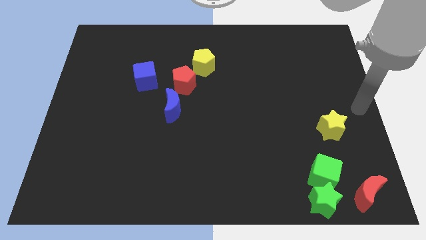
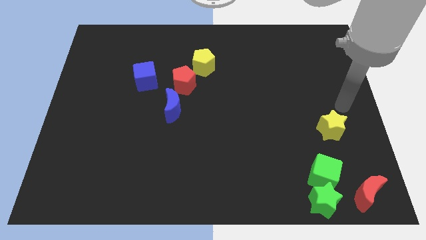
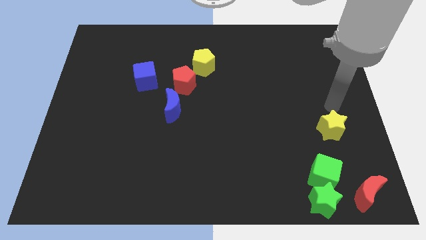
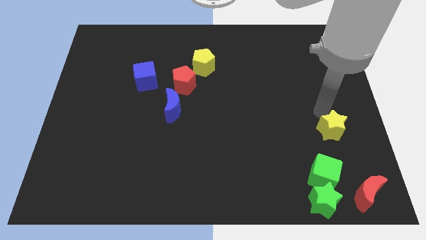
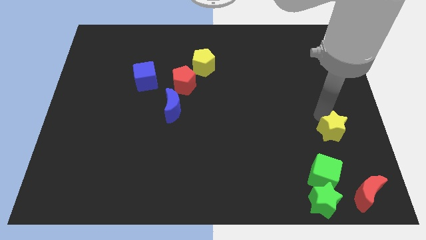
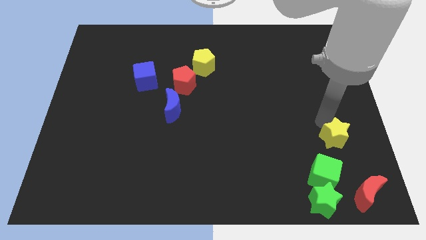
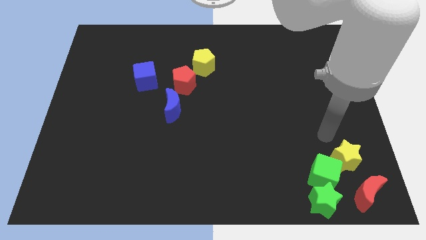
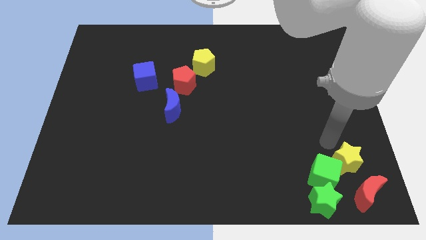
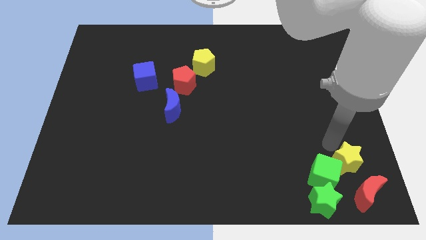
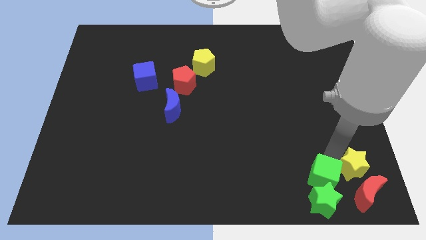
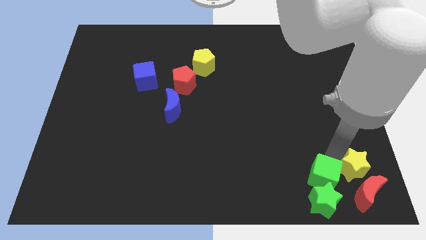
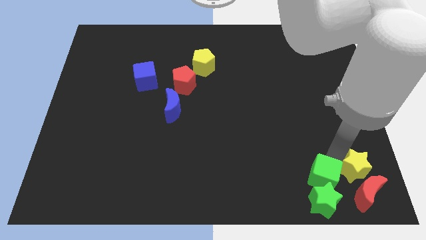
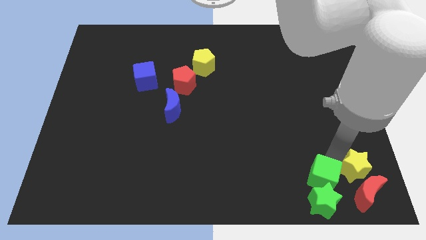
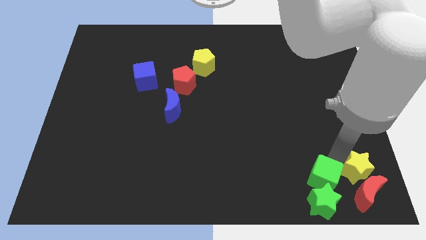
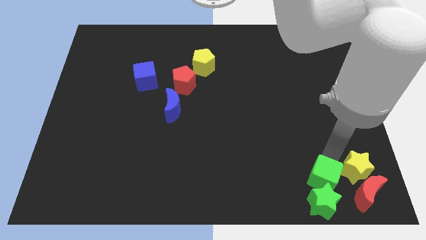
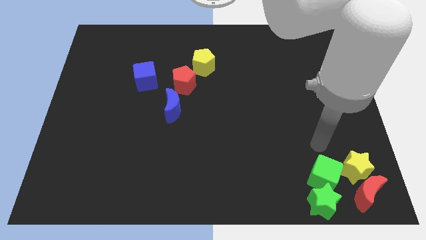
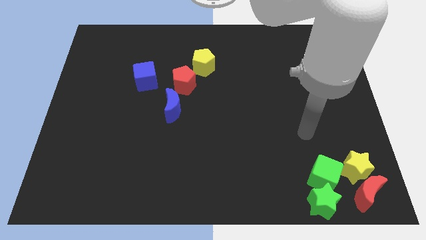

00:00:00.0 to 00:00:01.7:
place the yellow star above the red crescent

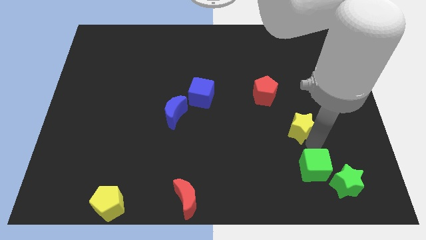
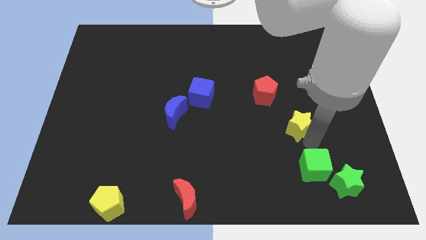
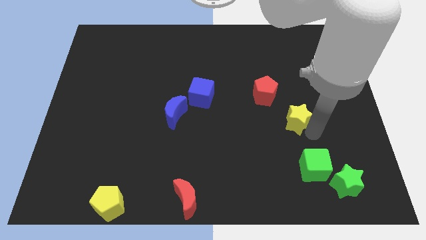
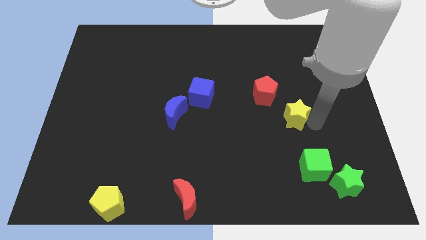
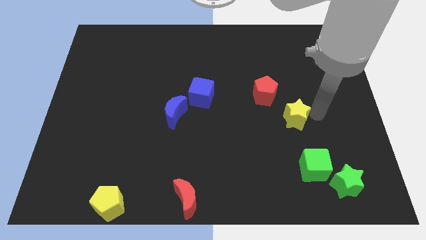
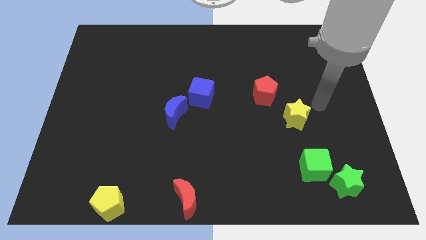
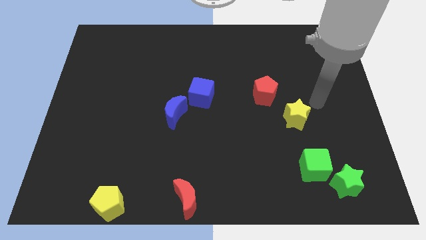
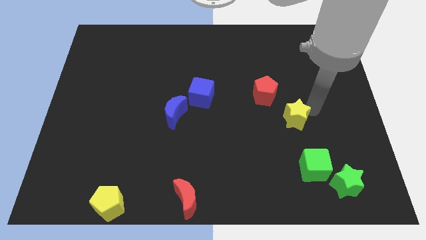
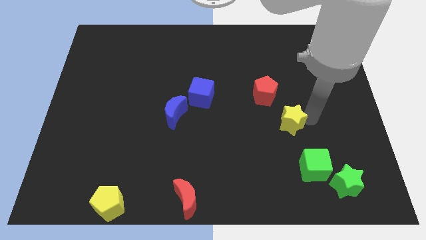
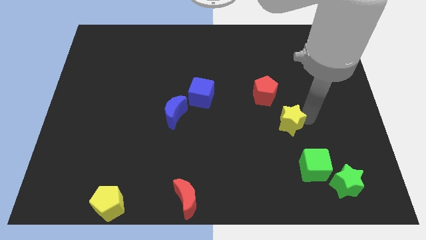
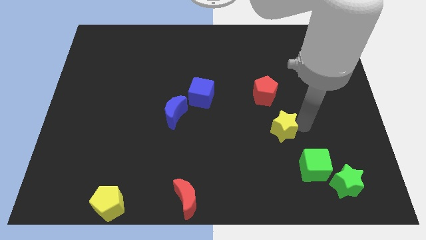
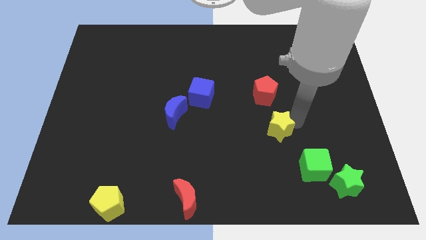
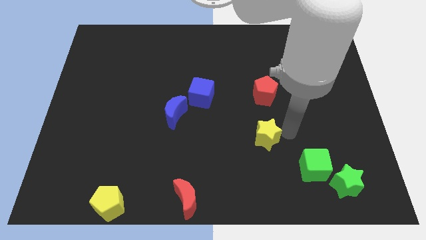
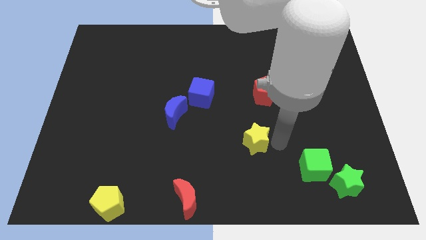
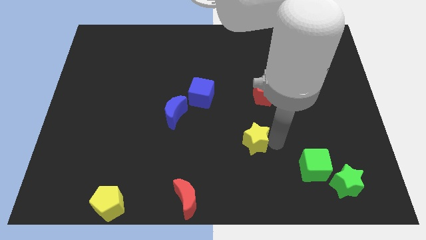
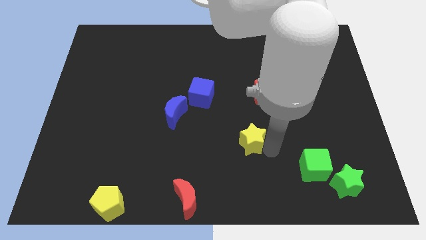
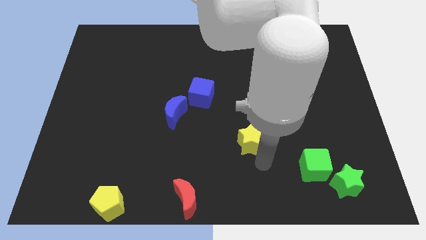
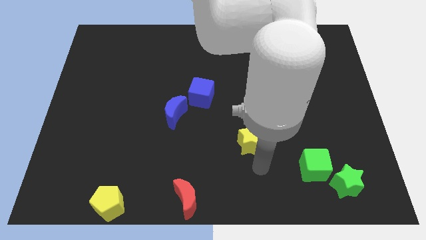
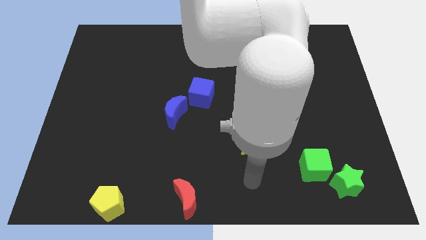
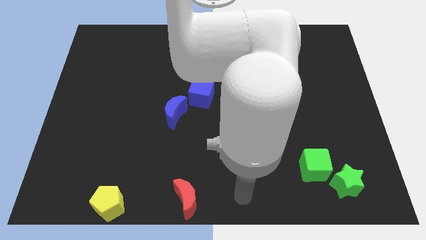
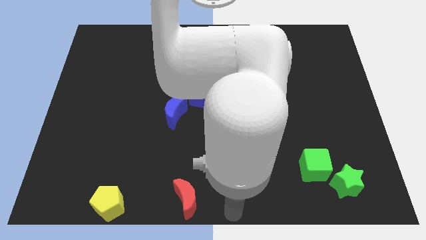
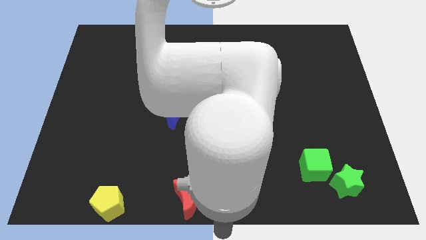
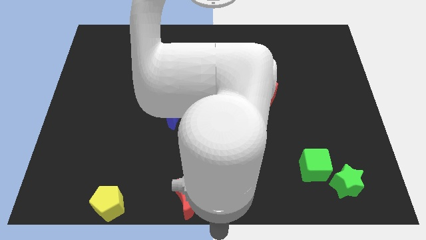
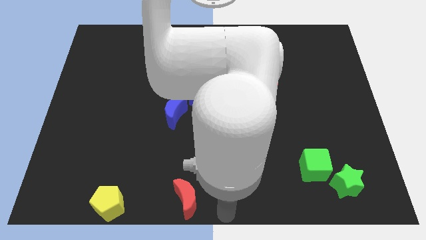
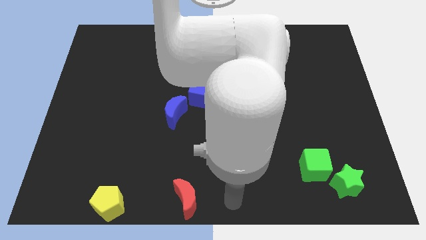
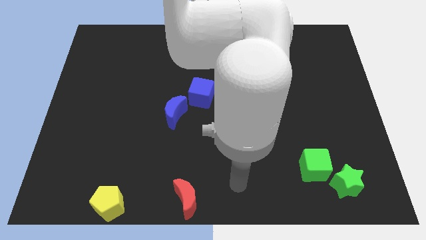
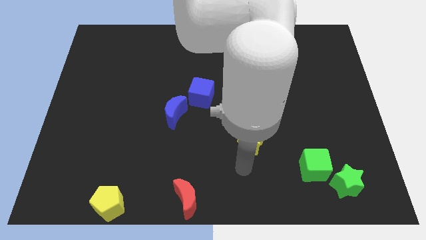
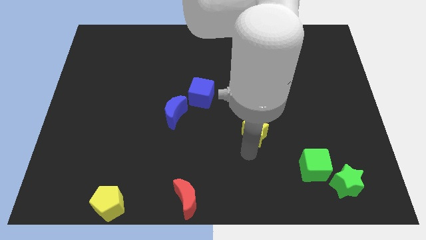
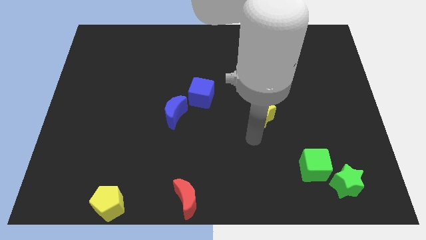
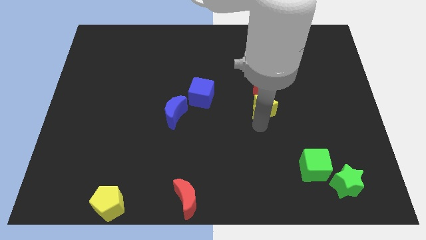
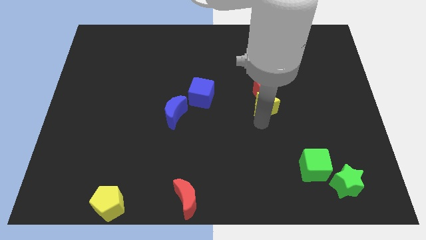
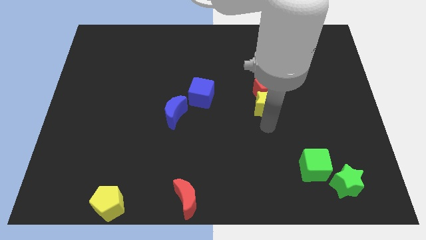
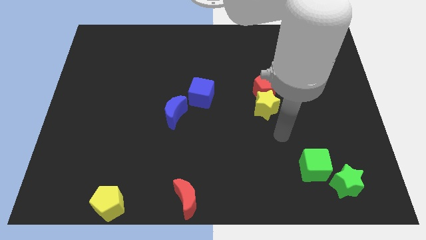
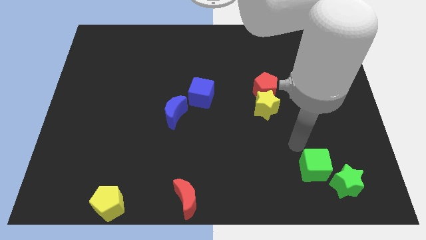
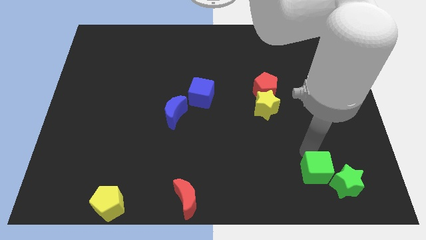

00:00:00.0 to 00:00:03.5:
move the yellow star to the bottom side of the red pentagon

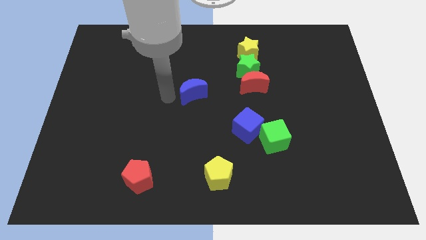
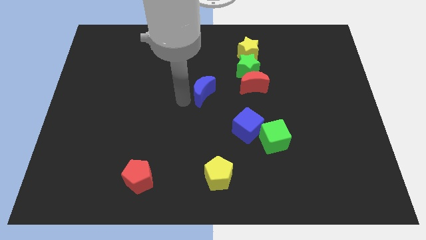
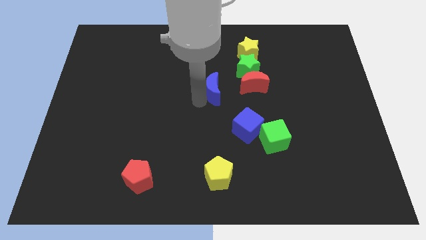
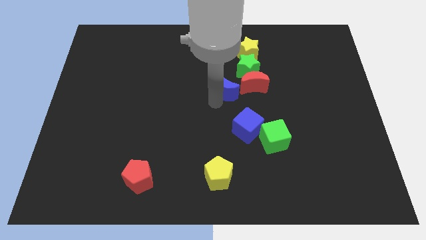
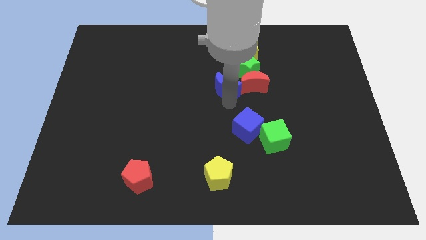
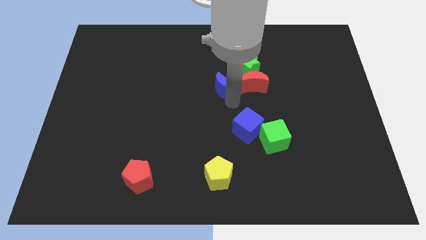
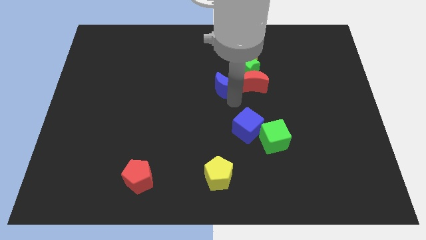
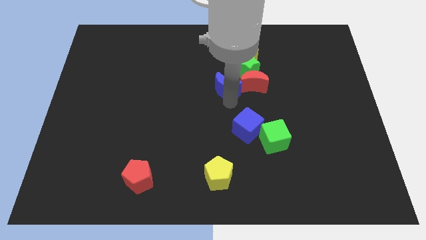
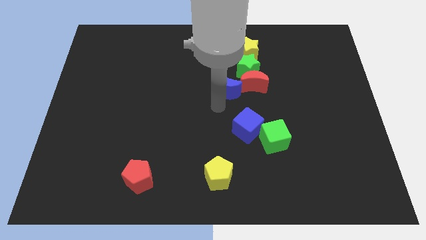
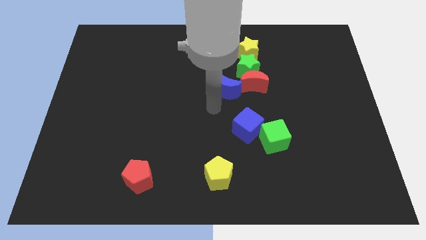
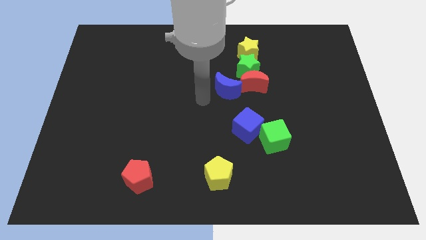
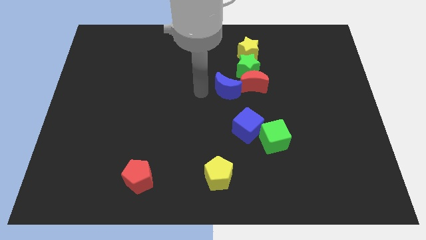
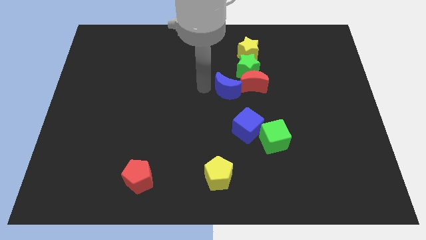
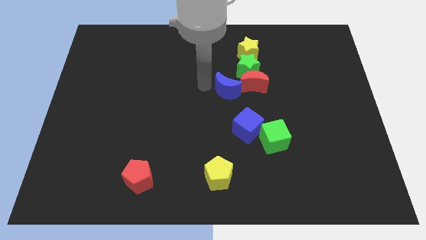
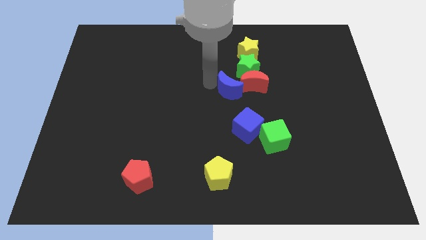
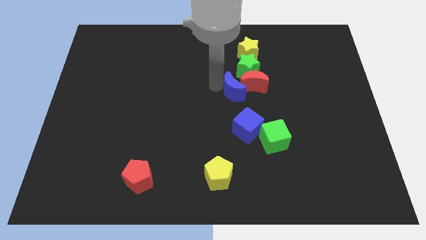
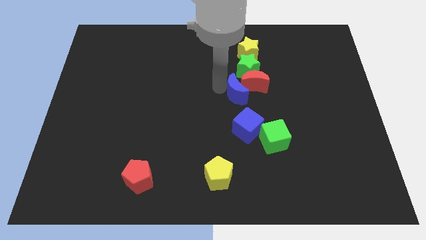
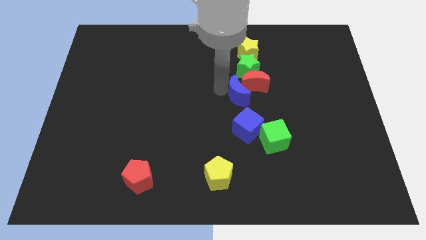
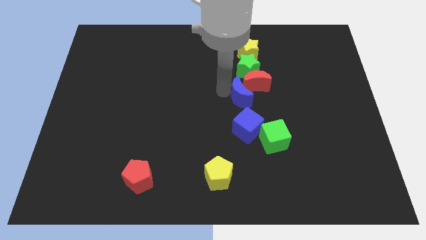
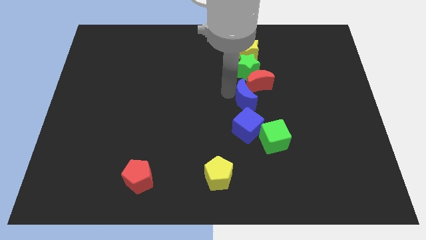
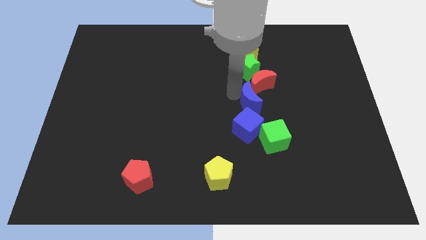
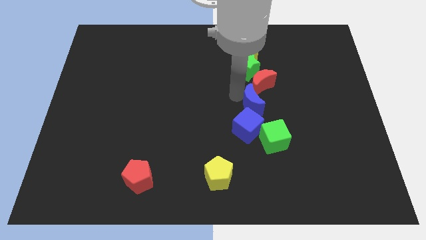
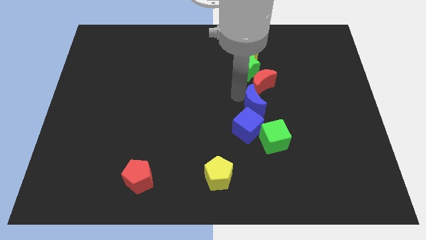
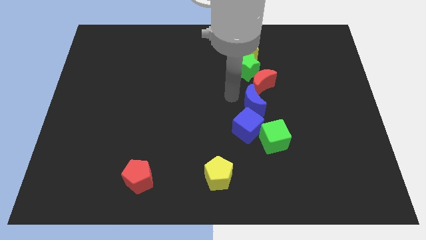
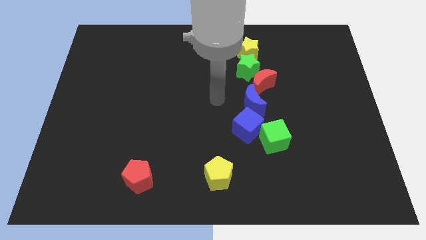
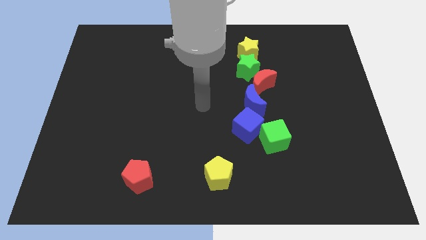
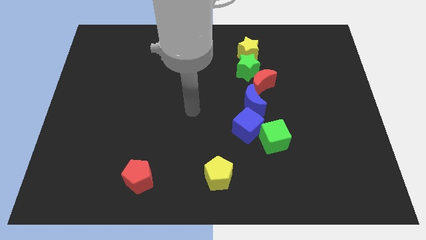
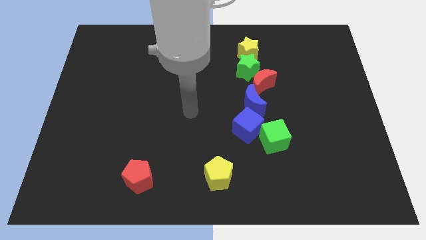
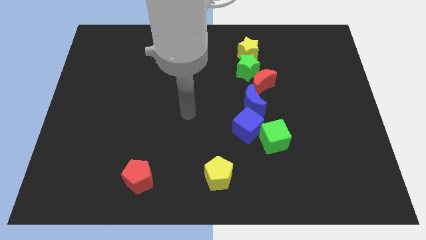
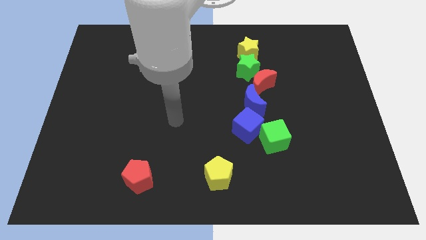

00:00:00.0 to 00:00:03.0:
move blue moon above blue cube

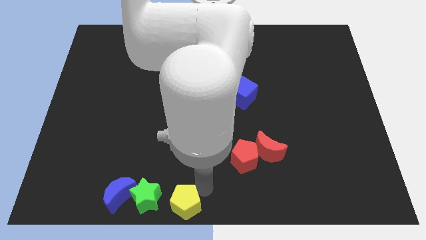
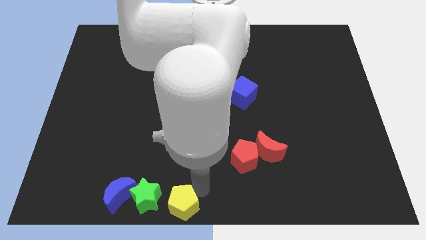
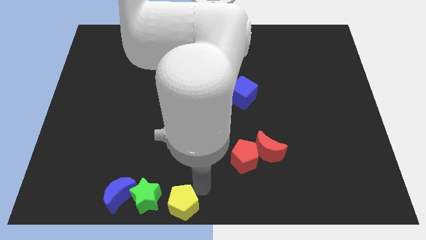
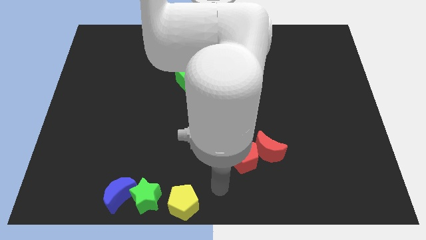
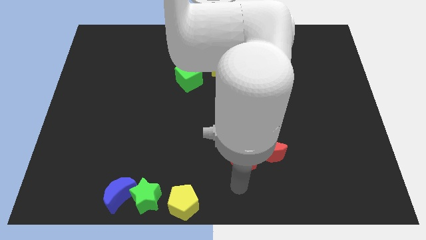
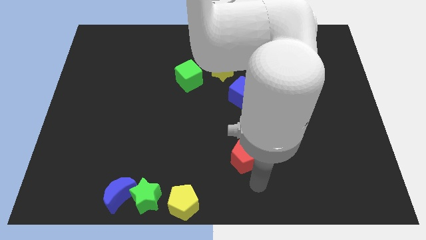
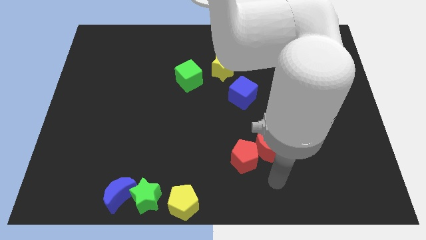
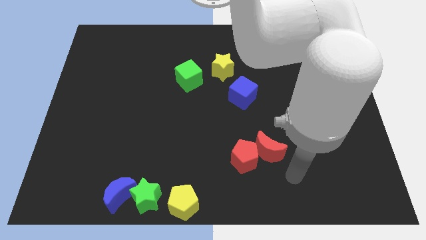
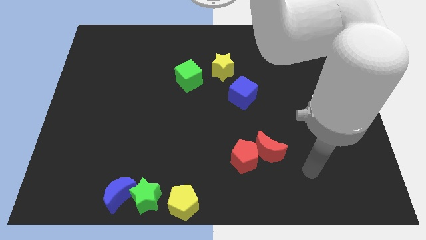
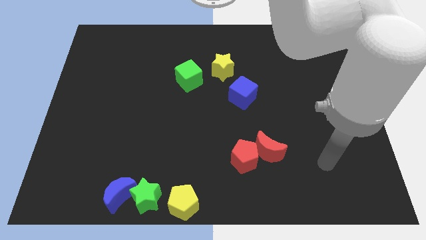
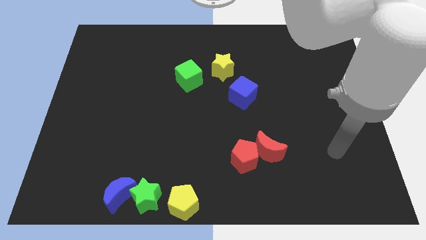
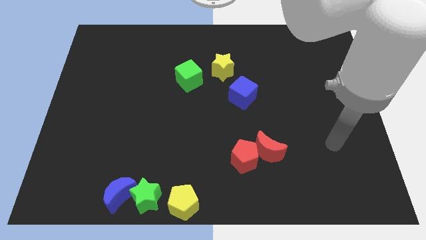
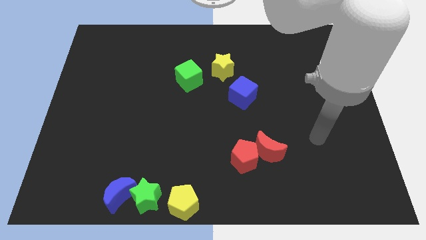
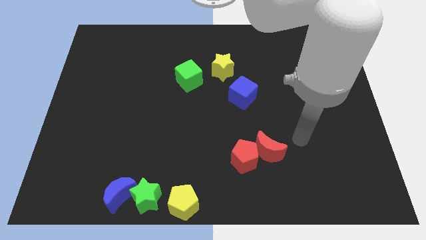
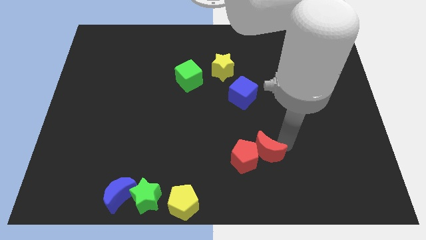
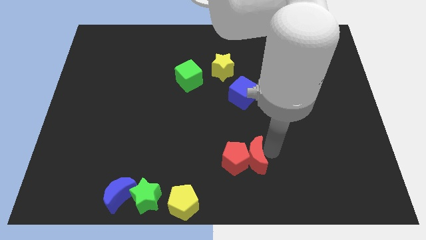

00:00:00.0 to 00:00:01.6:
place the arm to the right of the red moon
